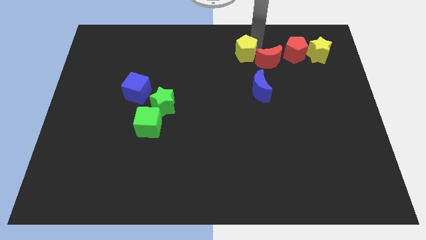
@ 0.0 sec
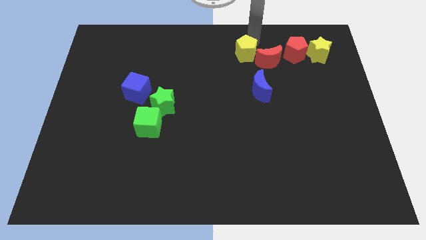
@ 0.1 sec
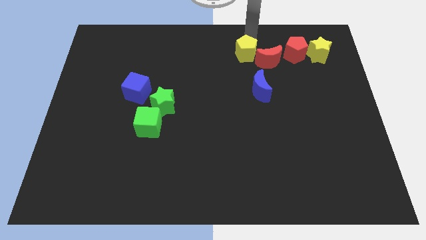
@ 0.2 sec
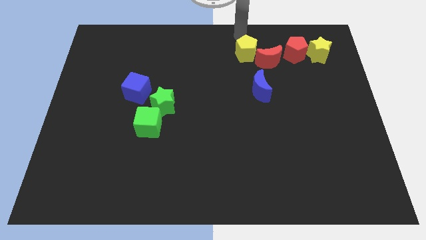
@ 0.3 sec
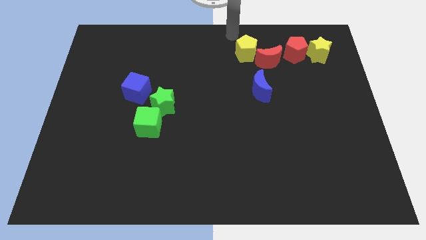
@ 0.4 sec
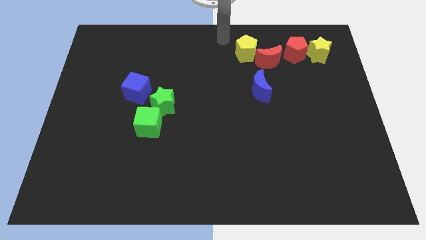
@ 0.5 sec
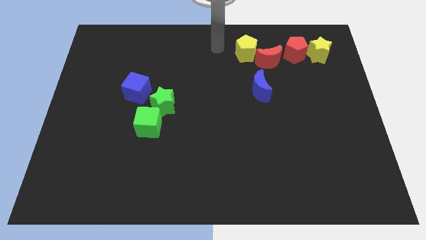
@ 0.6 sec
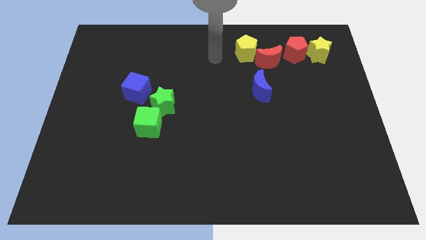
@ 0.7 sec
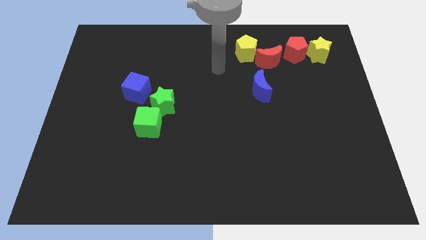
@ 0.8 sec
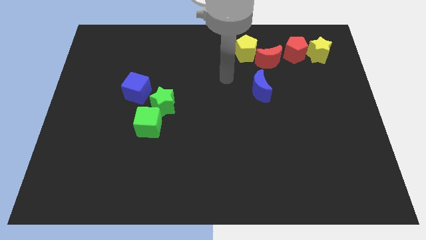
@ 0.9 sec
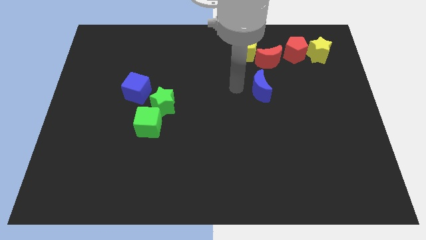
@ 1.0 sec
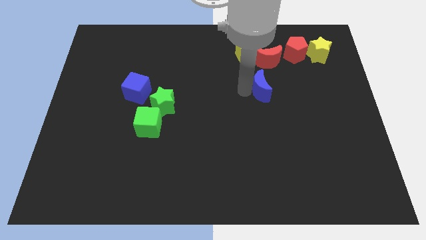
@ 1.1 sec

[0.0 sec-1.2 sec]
push your arm left to the blue crescent

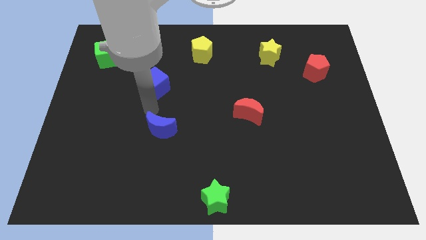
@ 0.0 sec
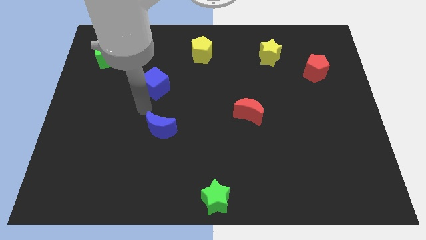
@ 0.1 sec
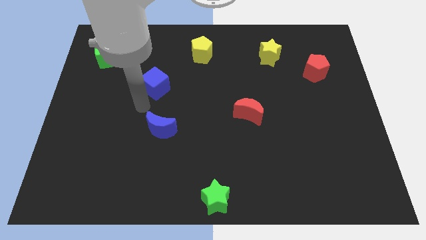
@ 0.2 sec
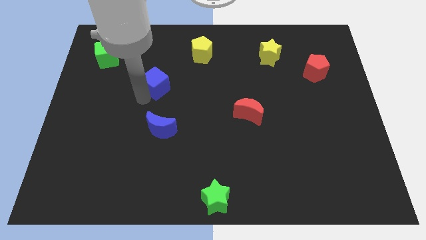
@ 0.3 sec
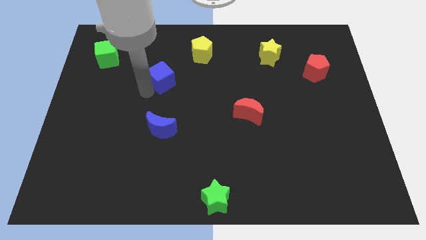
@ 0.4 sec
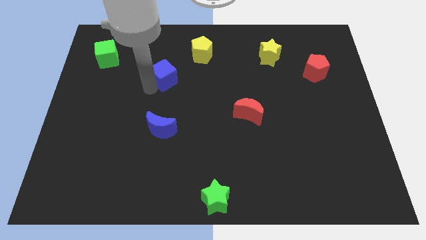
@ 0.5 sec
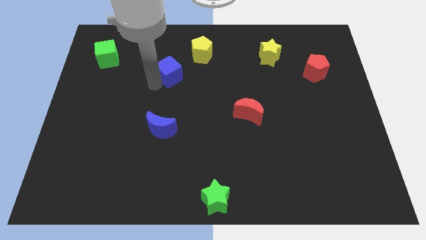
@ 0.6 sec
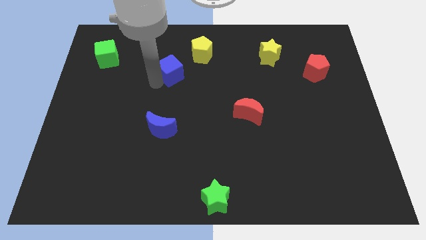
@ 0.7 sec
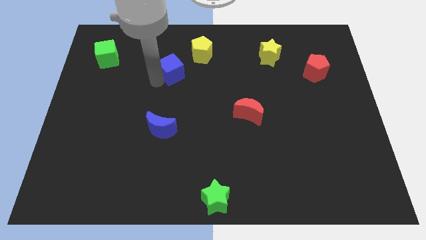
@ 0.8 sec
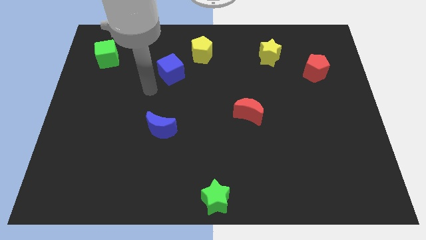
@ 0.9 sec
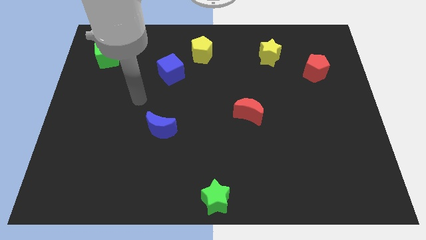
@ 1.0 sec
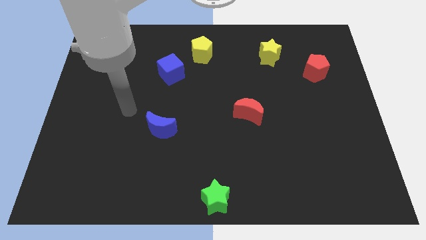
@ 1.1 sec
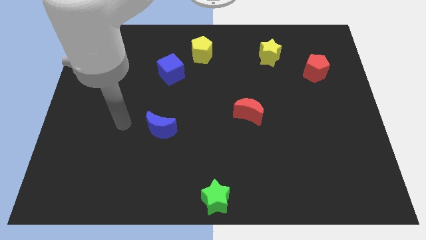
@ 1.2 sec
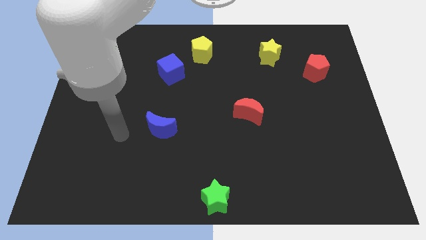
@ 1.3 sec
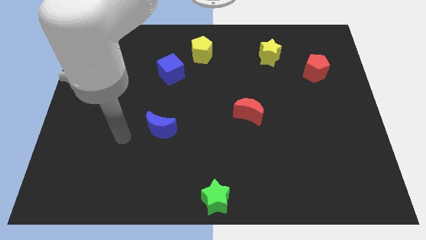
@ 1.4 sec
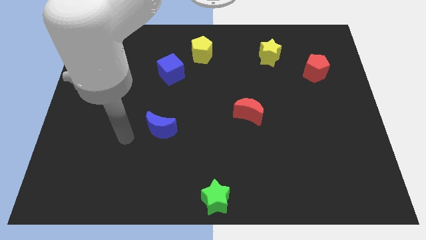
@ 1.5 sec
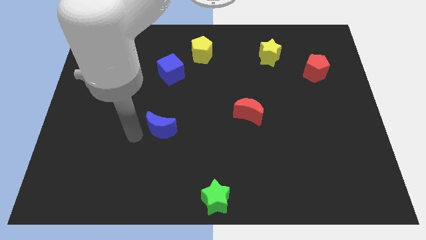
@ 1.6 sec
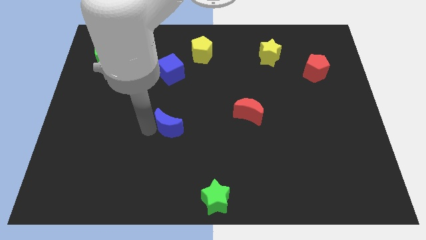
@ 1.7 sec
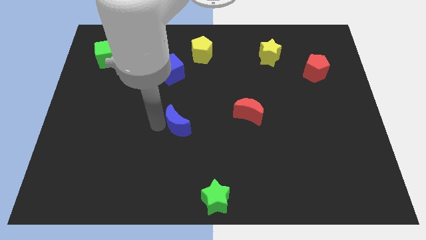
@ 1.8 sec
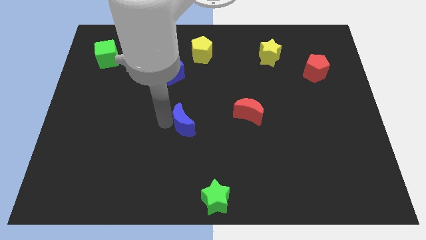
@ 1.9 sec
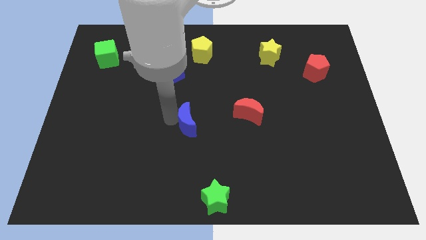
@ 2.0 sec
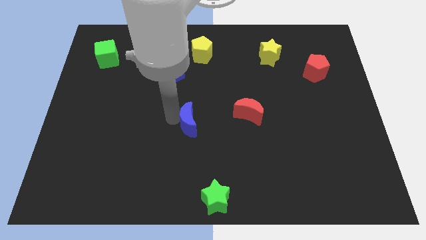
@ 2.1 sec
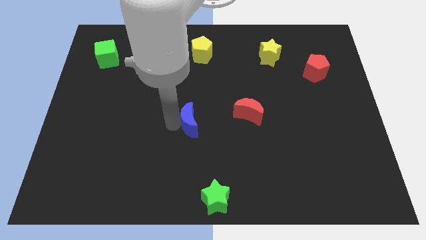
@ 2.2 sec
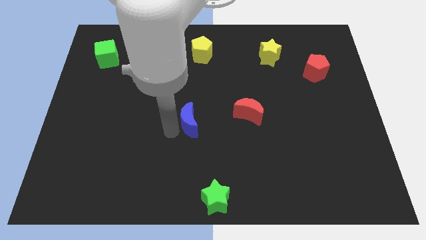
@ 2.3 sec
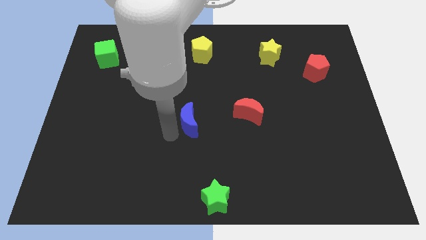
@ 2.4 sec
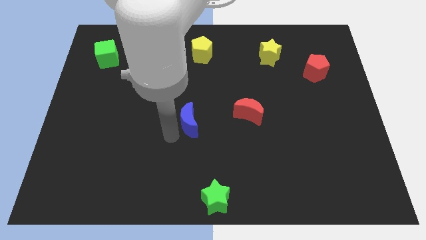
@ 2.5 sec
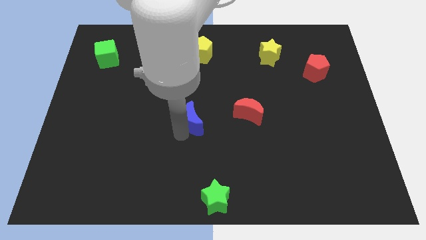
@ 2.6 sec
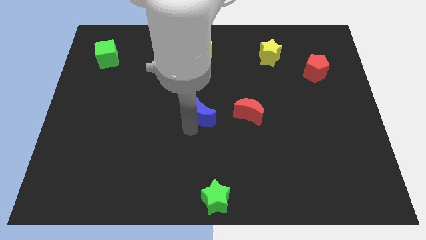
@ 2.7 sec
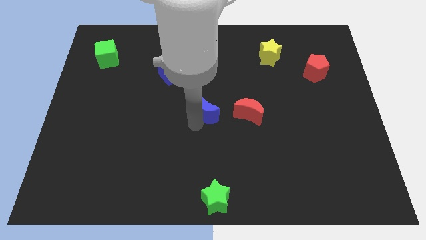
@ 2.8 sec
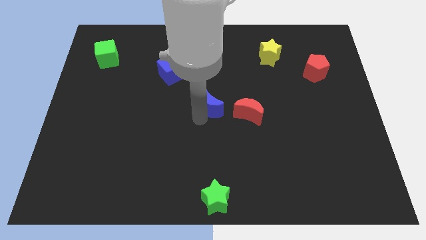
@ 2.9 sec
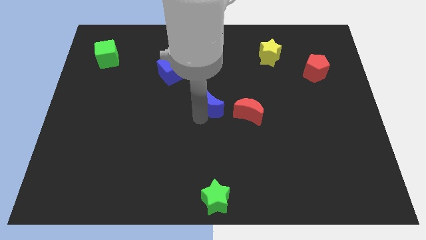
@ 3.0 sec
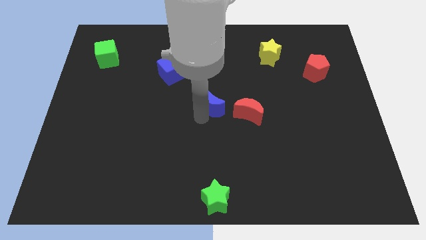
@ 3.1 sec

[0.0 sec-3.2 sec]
place the blue moon left to the red moon

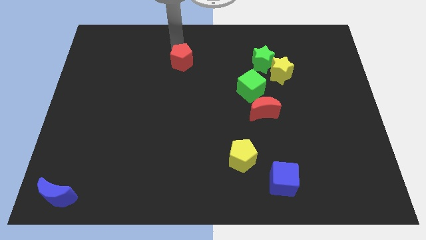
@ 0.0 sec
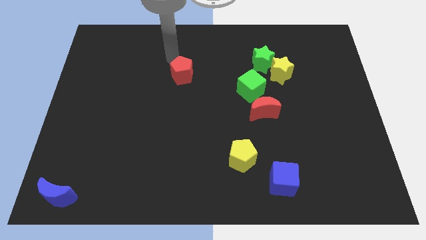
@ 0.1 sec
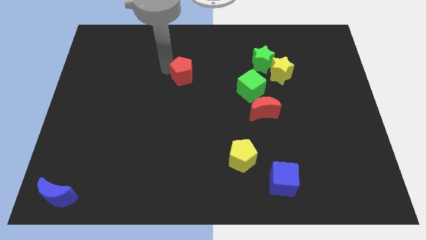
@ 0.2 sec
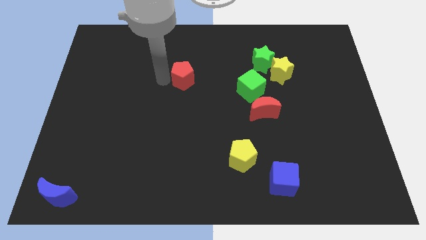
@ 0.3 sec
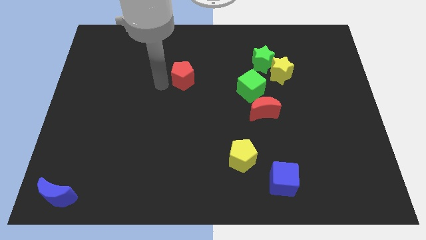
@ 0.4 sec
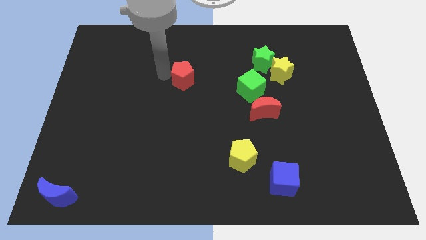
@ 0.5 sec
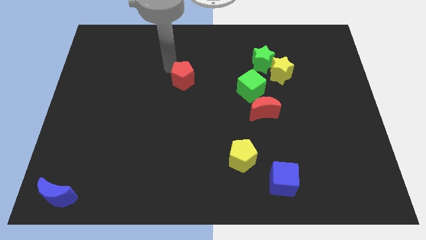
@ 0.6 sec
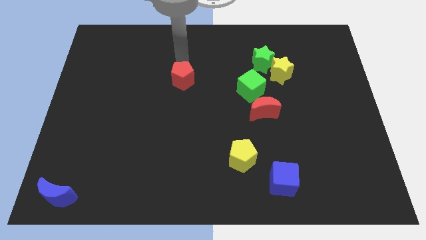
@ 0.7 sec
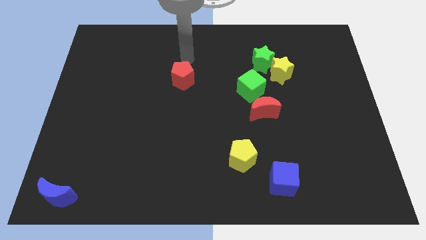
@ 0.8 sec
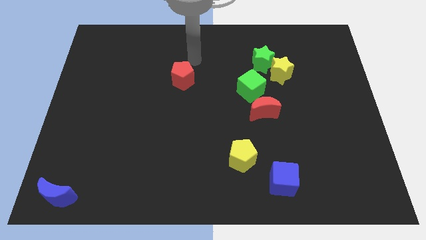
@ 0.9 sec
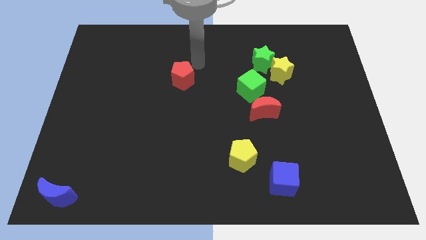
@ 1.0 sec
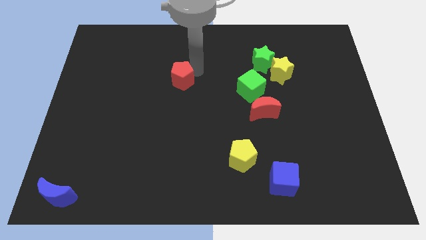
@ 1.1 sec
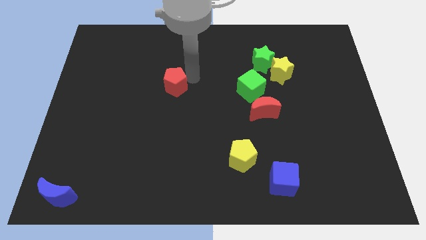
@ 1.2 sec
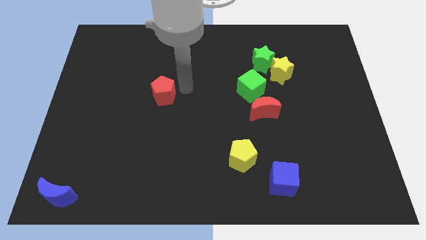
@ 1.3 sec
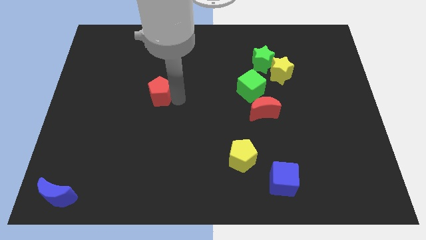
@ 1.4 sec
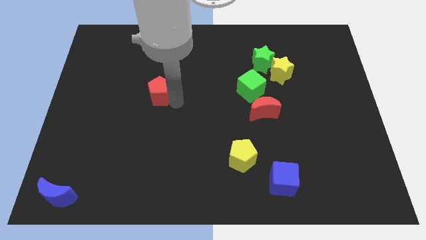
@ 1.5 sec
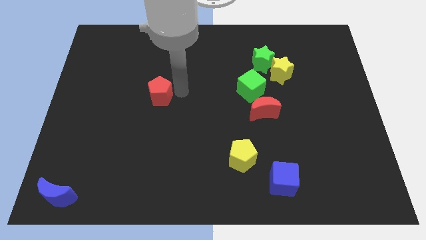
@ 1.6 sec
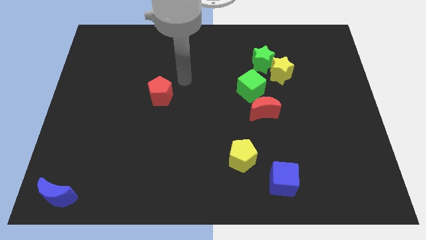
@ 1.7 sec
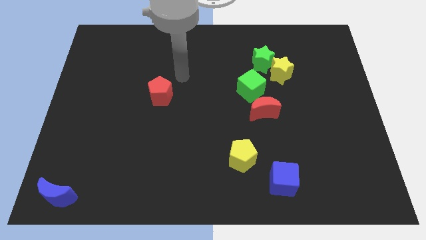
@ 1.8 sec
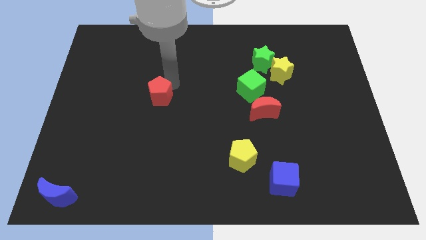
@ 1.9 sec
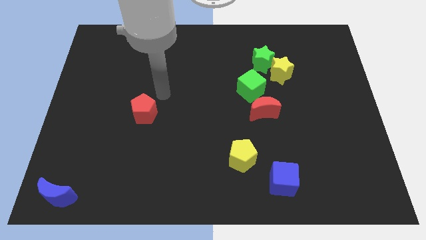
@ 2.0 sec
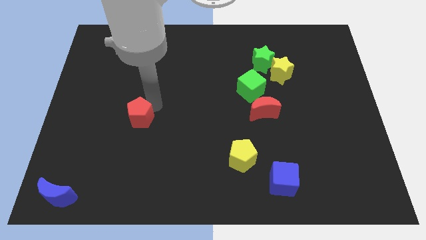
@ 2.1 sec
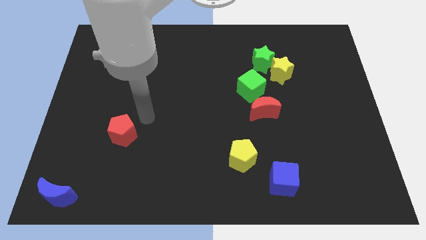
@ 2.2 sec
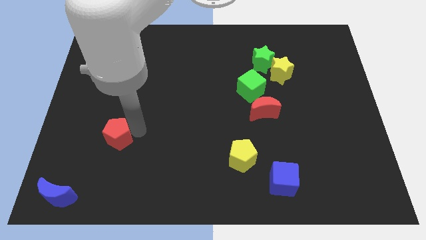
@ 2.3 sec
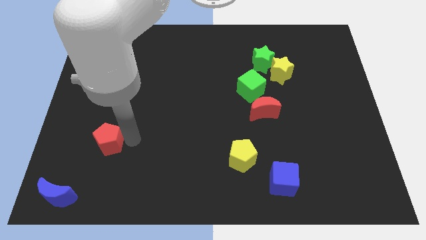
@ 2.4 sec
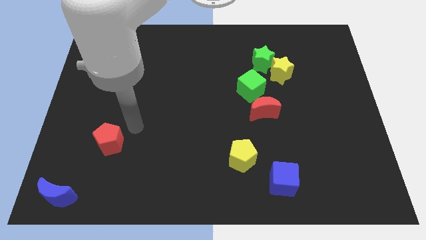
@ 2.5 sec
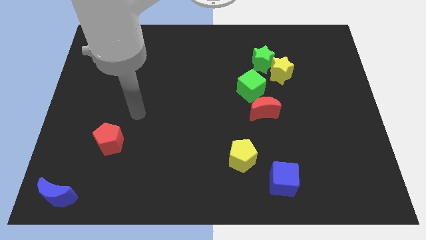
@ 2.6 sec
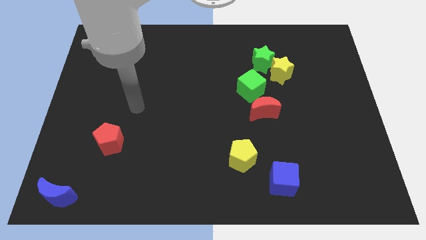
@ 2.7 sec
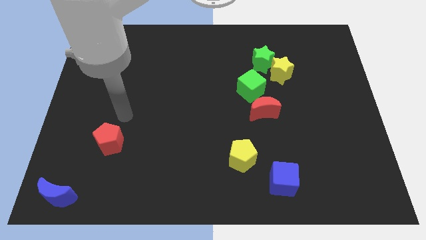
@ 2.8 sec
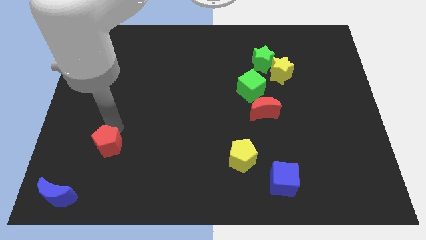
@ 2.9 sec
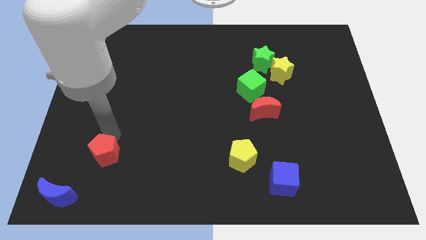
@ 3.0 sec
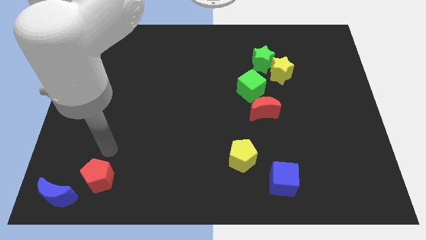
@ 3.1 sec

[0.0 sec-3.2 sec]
move red pentagon towards blue crescent

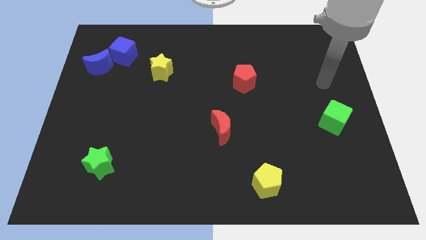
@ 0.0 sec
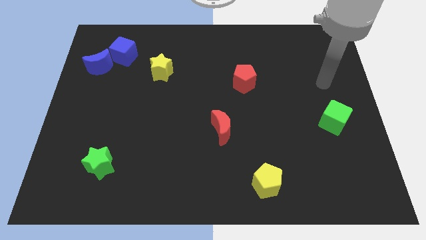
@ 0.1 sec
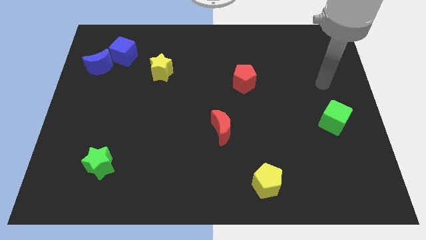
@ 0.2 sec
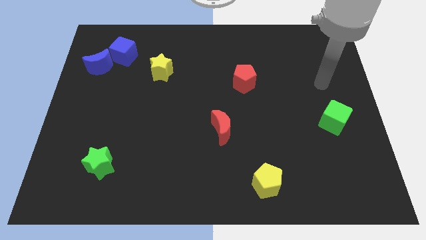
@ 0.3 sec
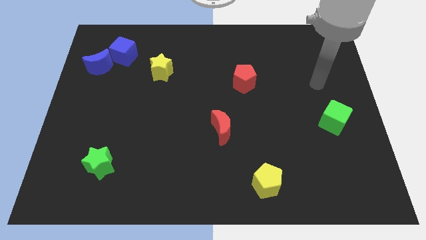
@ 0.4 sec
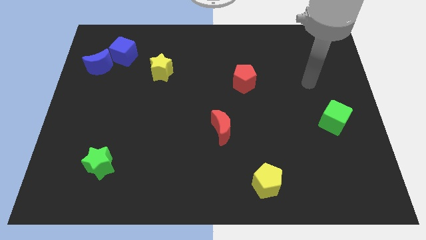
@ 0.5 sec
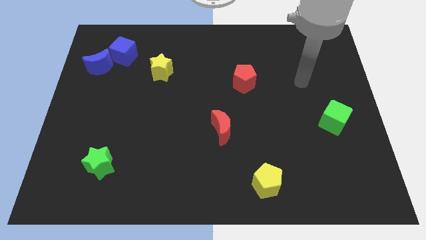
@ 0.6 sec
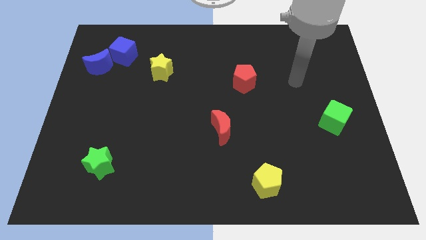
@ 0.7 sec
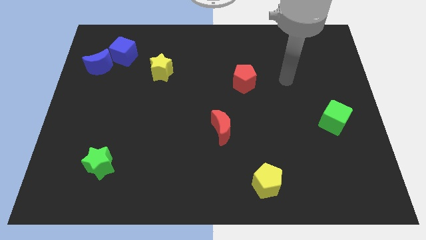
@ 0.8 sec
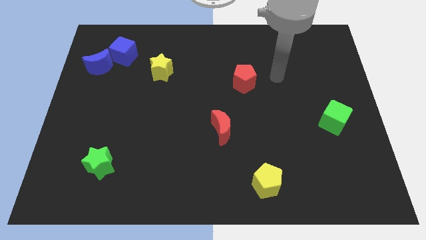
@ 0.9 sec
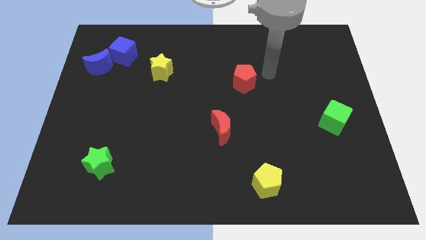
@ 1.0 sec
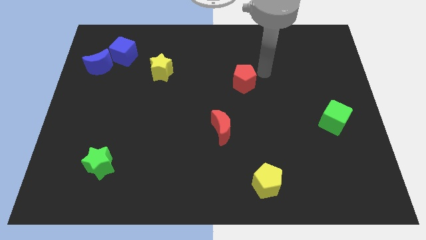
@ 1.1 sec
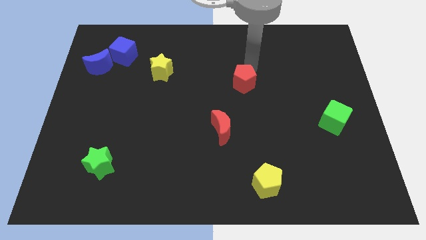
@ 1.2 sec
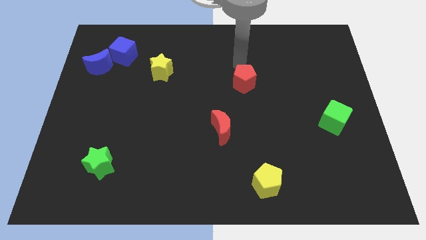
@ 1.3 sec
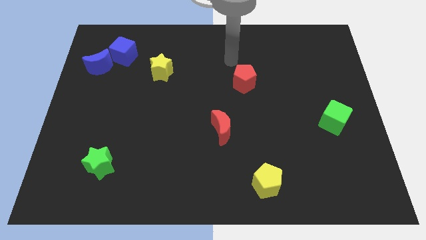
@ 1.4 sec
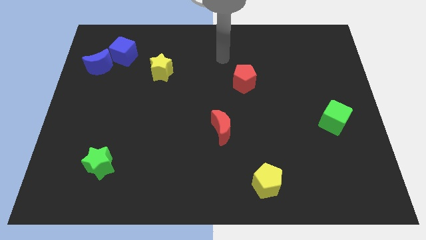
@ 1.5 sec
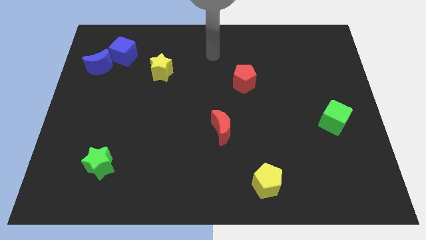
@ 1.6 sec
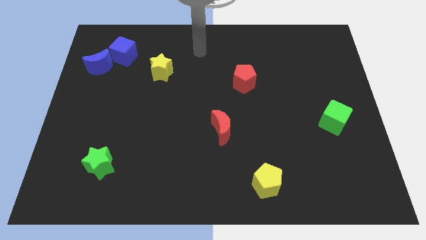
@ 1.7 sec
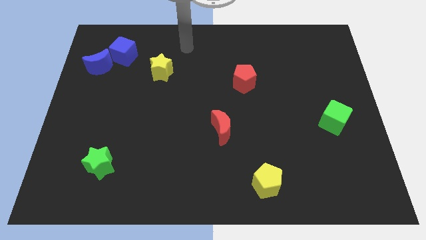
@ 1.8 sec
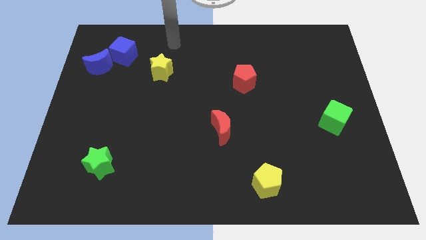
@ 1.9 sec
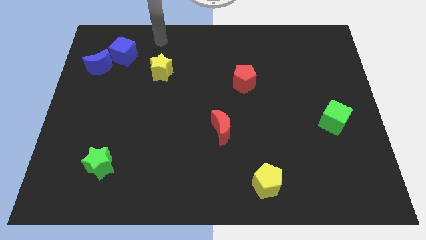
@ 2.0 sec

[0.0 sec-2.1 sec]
move the arm above the yellow star
